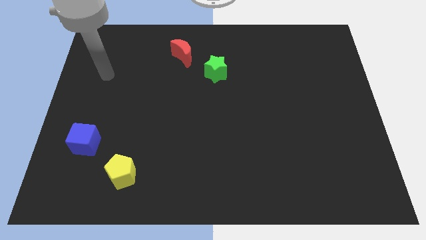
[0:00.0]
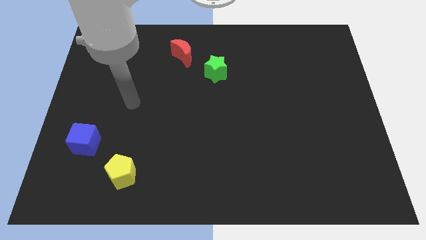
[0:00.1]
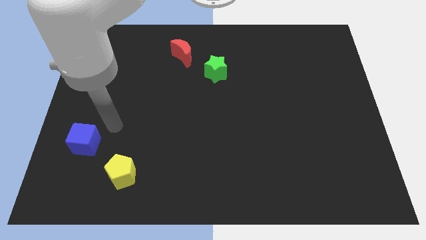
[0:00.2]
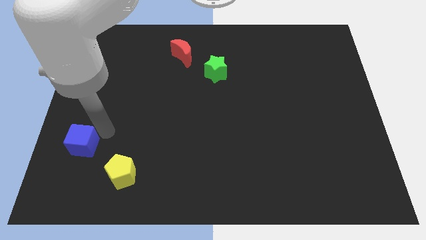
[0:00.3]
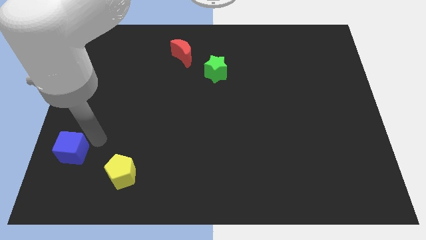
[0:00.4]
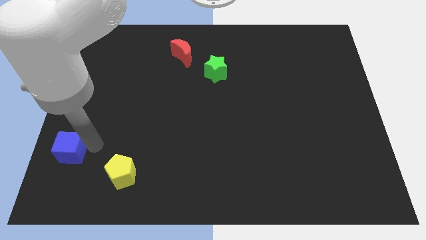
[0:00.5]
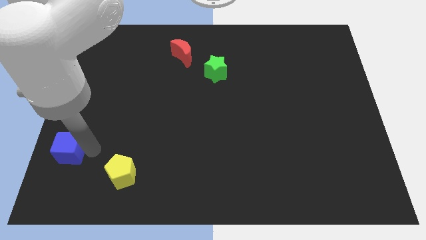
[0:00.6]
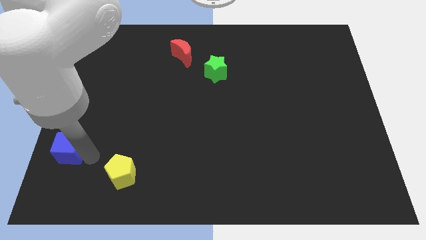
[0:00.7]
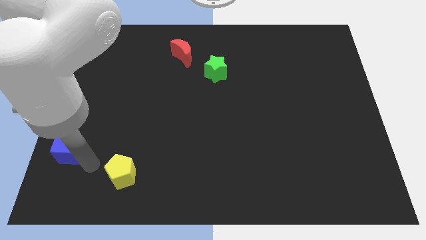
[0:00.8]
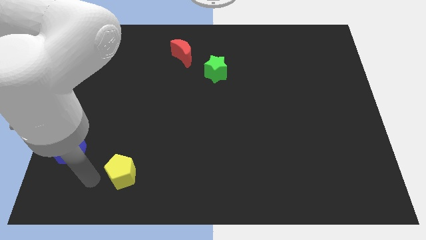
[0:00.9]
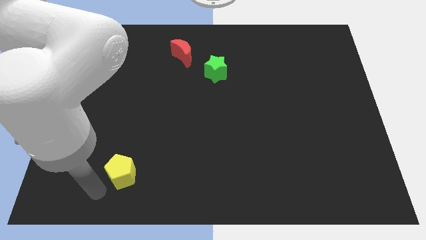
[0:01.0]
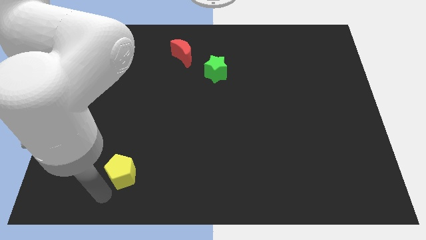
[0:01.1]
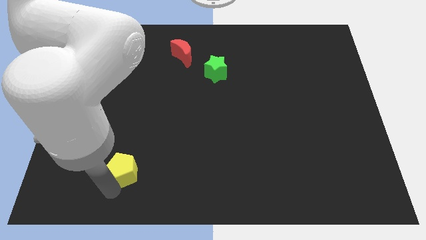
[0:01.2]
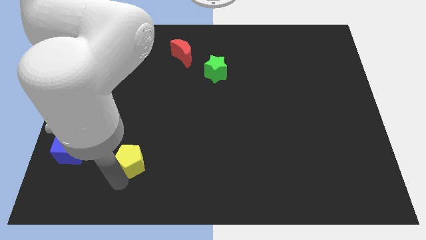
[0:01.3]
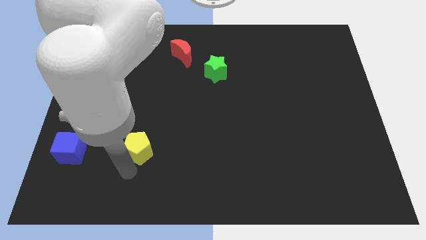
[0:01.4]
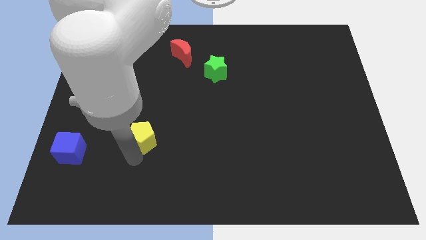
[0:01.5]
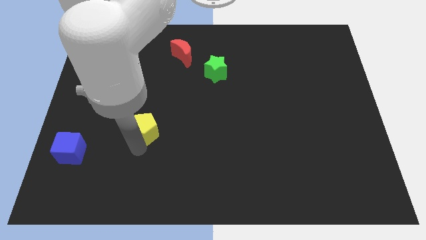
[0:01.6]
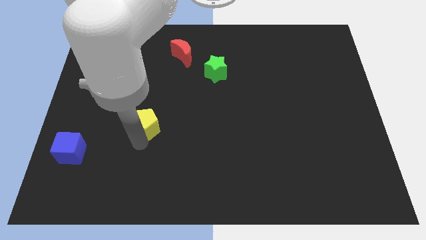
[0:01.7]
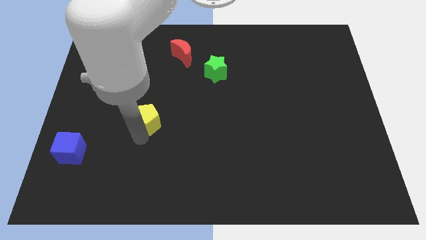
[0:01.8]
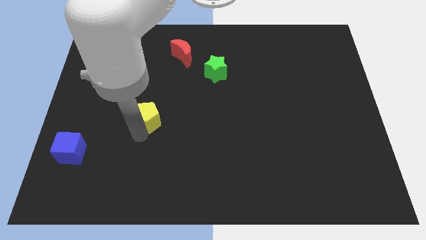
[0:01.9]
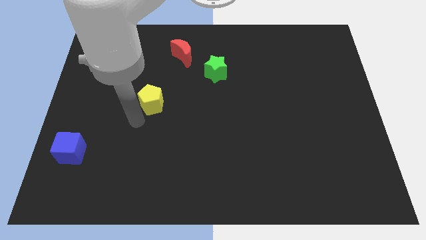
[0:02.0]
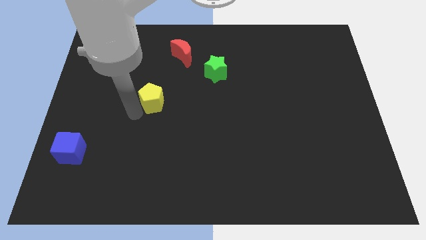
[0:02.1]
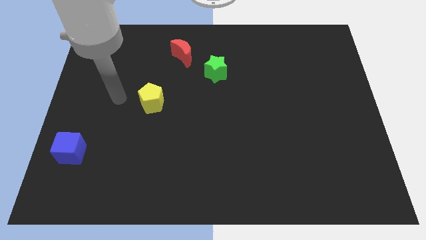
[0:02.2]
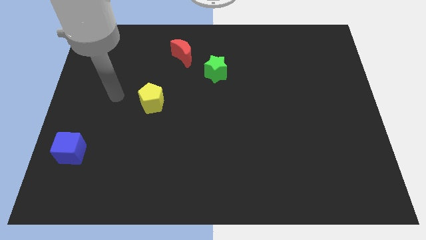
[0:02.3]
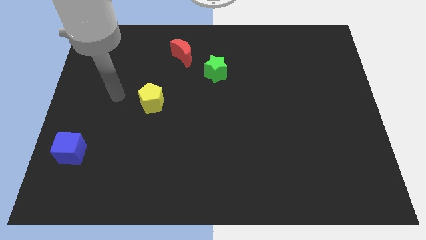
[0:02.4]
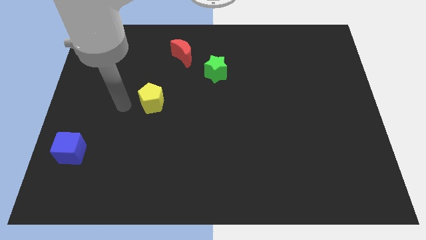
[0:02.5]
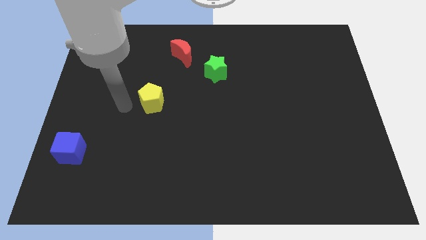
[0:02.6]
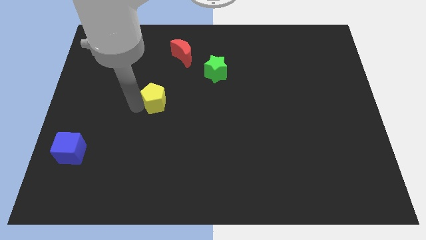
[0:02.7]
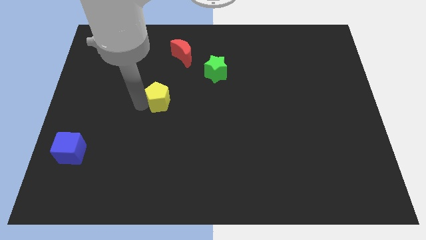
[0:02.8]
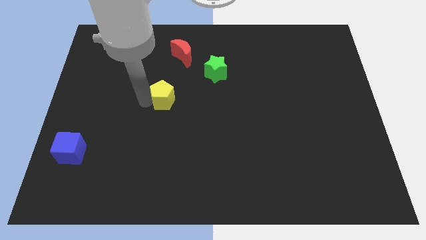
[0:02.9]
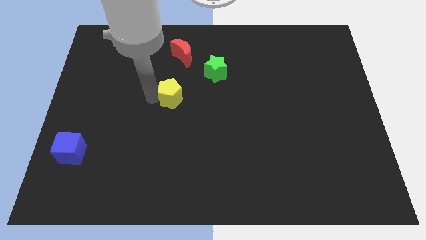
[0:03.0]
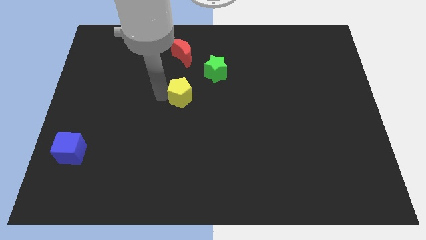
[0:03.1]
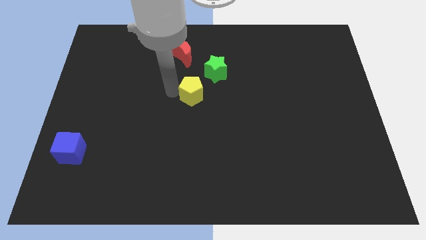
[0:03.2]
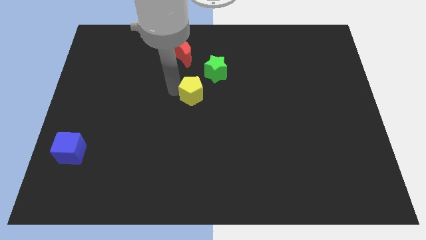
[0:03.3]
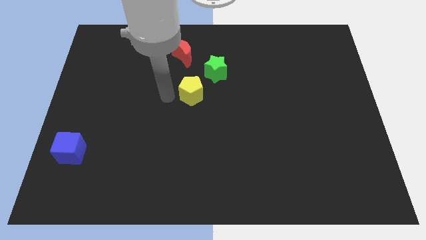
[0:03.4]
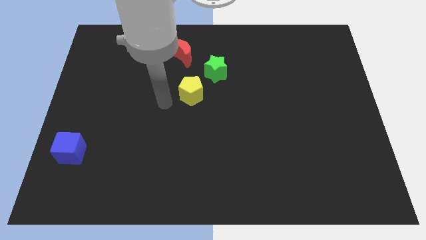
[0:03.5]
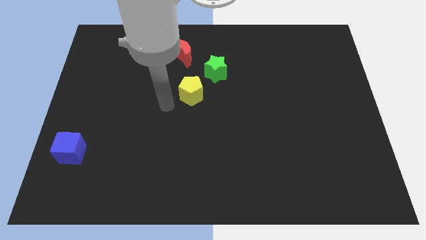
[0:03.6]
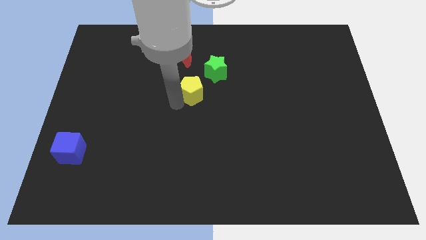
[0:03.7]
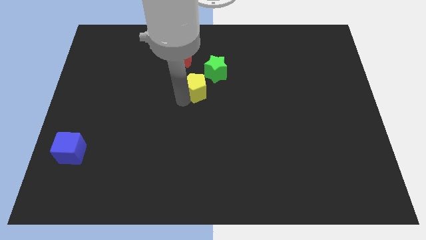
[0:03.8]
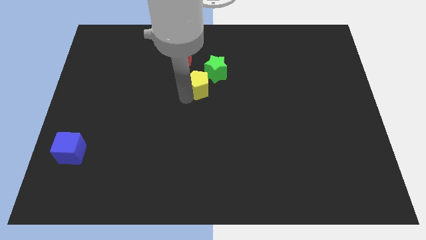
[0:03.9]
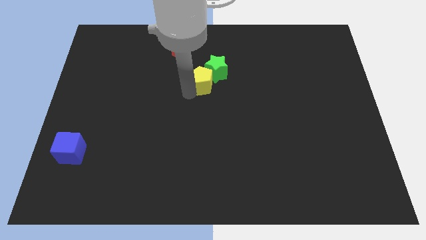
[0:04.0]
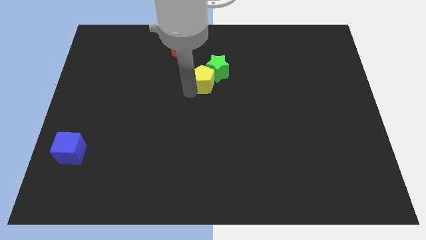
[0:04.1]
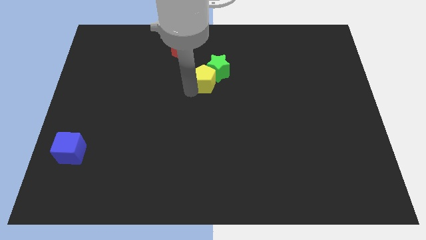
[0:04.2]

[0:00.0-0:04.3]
move the yellow pentagon towards the green block

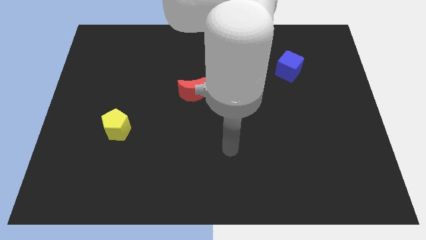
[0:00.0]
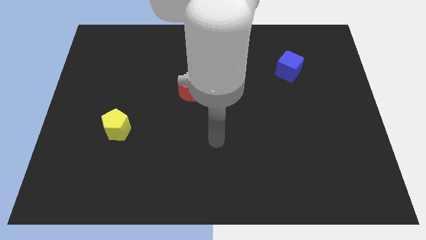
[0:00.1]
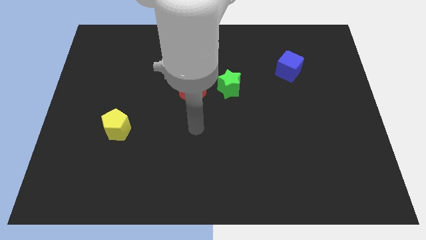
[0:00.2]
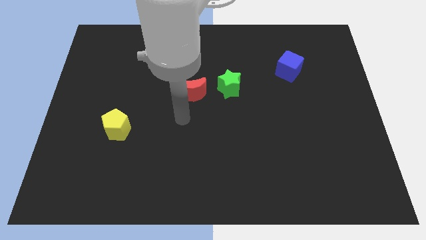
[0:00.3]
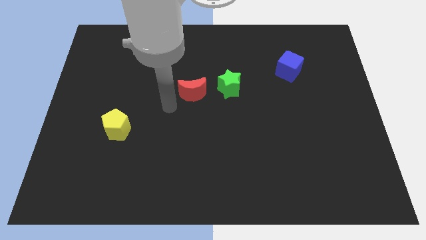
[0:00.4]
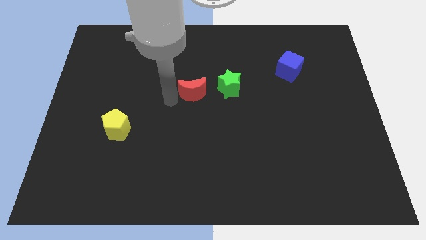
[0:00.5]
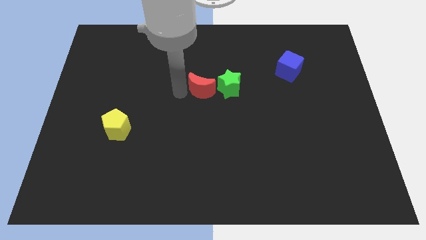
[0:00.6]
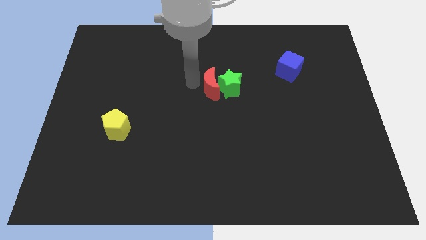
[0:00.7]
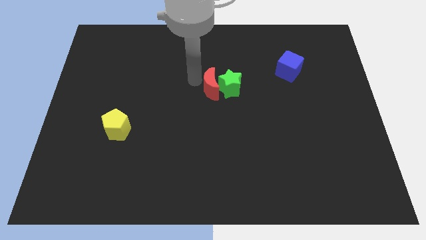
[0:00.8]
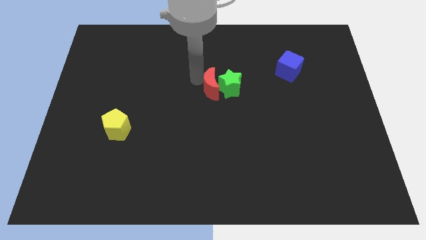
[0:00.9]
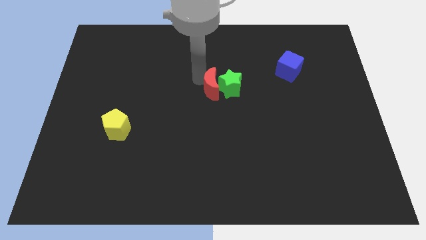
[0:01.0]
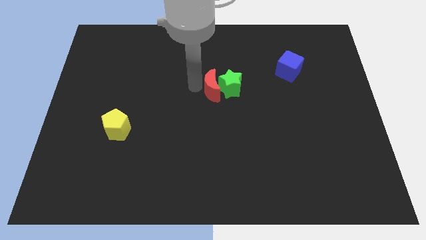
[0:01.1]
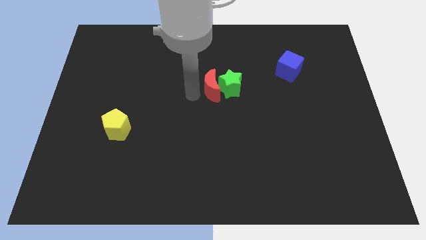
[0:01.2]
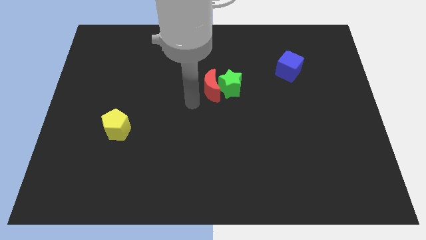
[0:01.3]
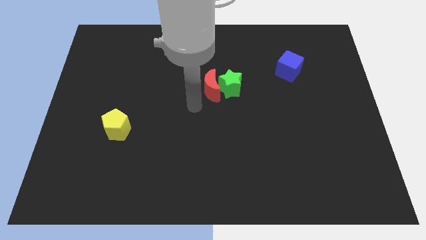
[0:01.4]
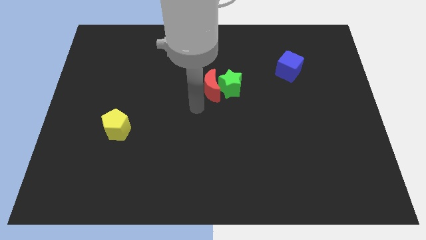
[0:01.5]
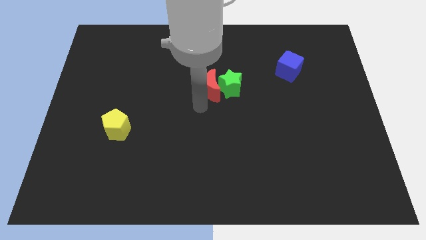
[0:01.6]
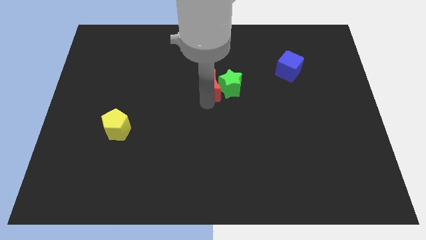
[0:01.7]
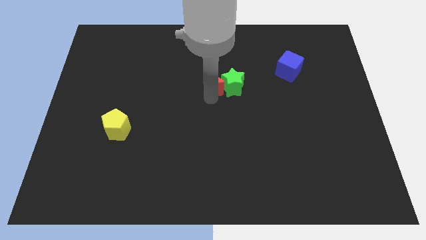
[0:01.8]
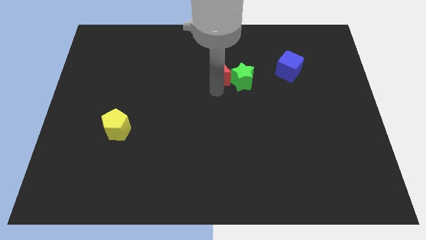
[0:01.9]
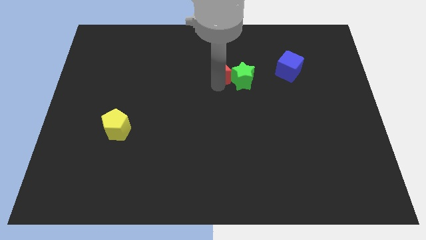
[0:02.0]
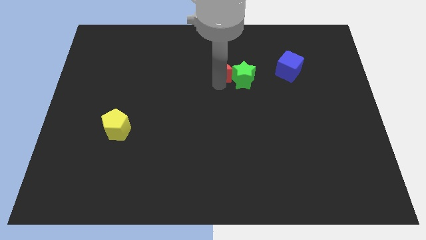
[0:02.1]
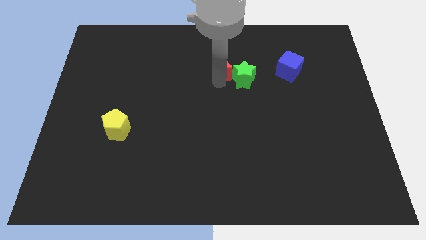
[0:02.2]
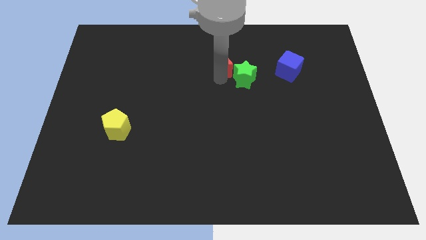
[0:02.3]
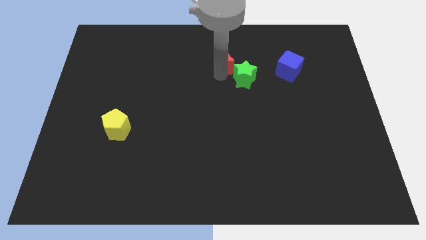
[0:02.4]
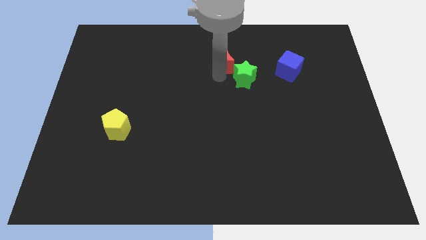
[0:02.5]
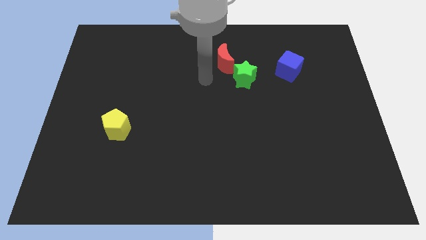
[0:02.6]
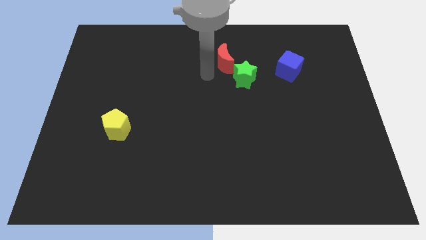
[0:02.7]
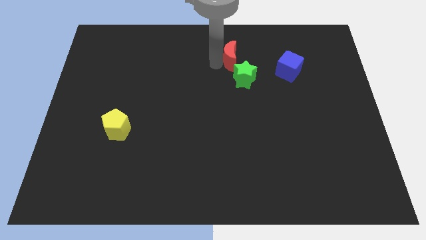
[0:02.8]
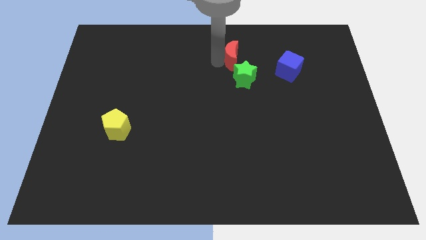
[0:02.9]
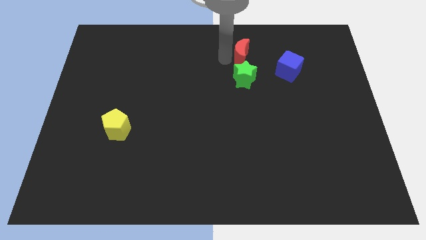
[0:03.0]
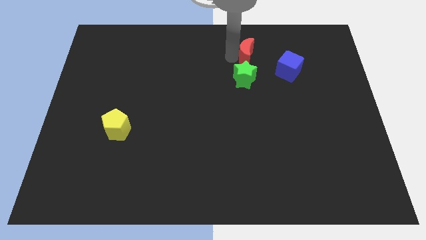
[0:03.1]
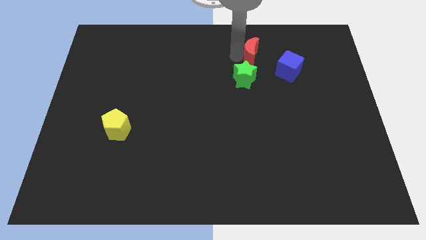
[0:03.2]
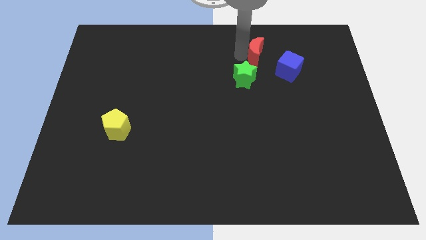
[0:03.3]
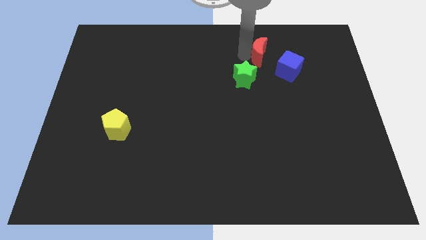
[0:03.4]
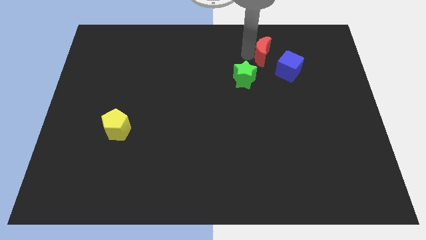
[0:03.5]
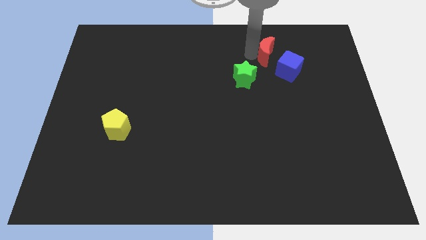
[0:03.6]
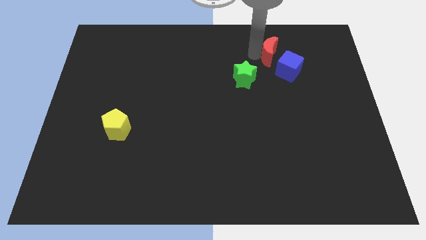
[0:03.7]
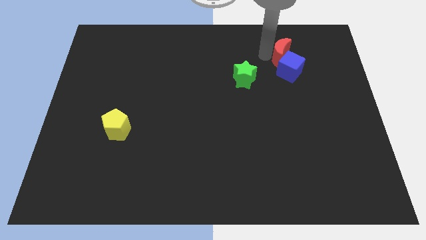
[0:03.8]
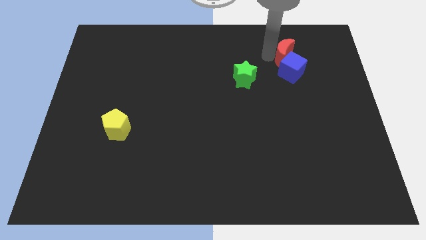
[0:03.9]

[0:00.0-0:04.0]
push the red moon towards the blue block
